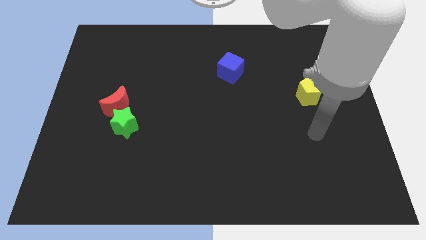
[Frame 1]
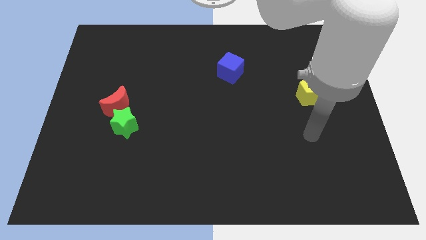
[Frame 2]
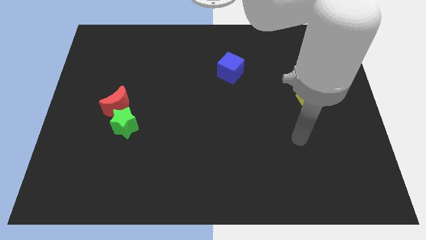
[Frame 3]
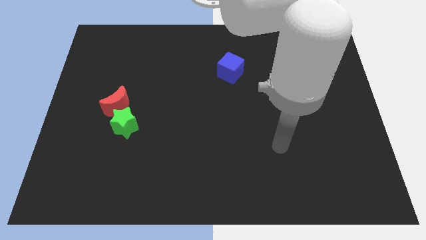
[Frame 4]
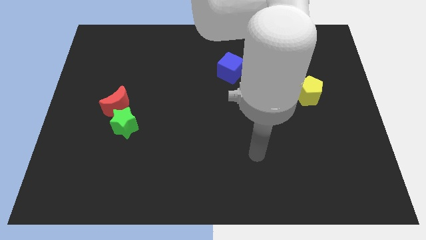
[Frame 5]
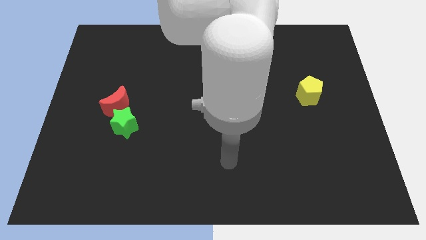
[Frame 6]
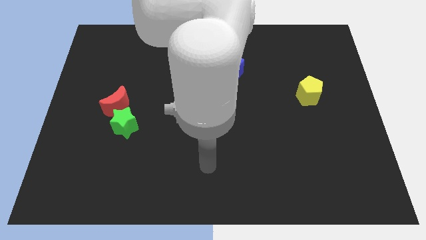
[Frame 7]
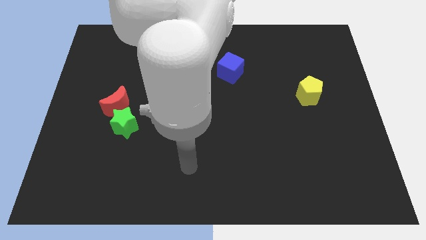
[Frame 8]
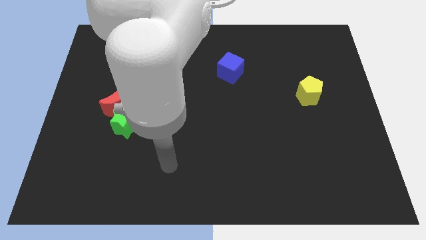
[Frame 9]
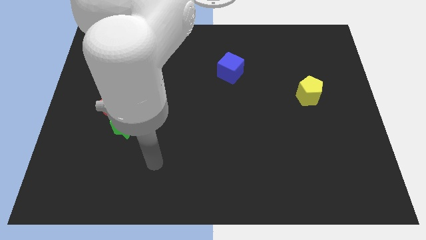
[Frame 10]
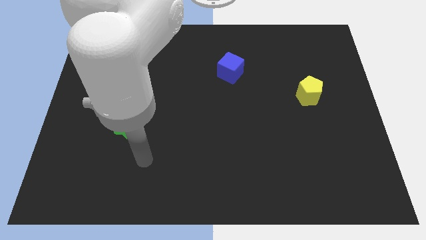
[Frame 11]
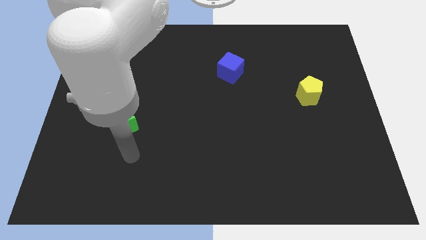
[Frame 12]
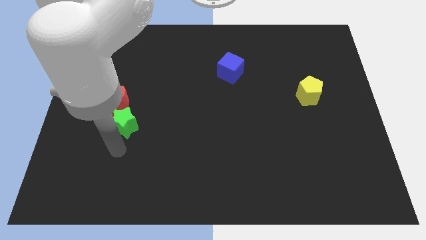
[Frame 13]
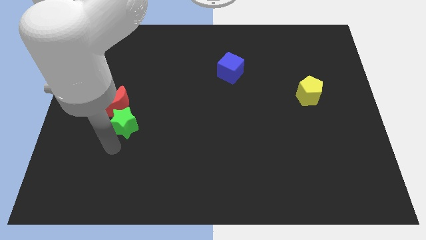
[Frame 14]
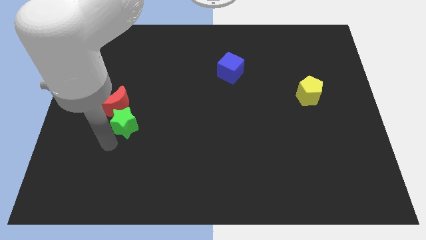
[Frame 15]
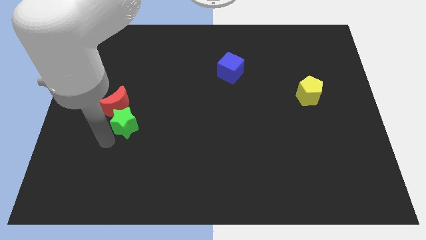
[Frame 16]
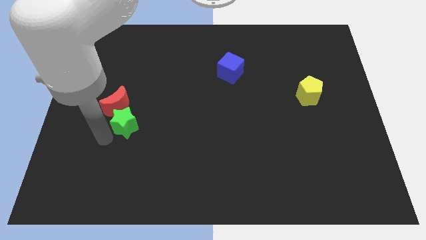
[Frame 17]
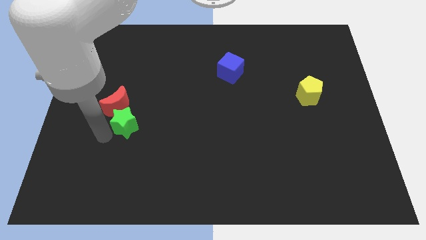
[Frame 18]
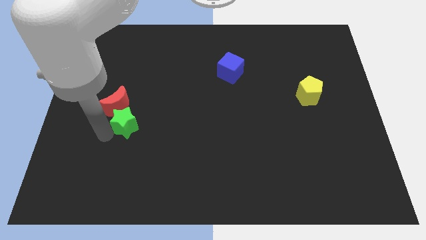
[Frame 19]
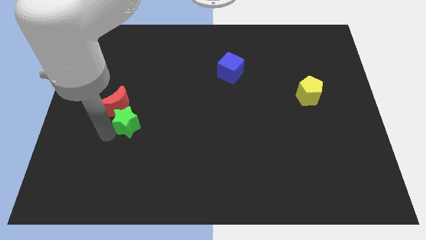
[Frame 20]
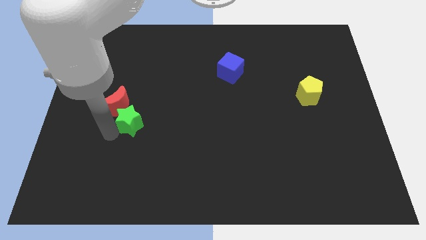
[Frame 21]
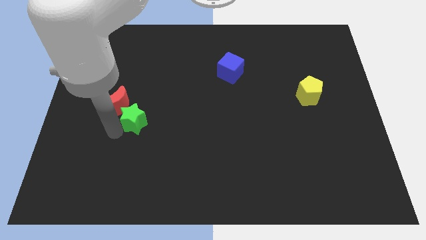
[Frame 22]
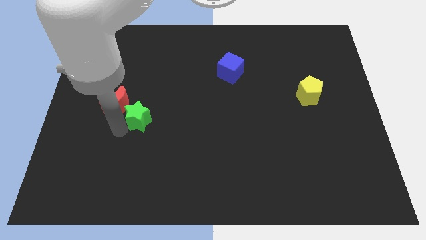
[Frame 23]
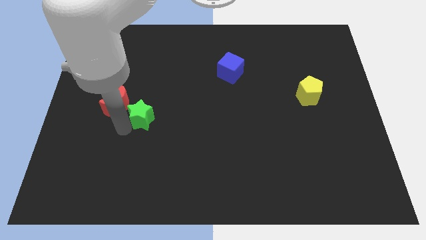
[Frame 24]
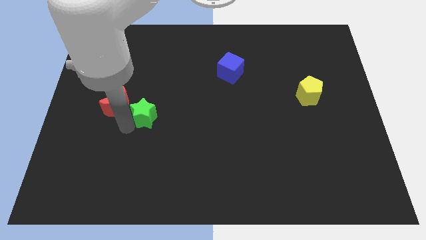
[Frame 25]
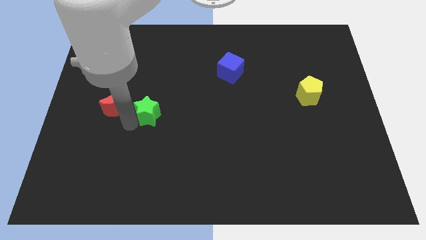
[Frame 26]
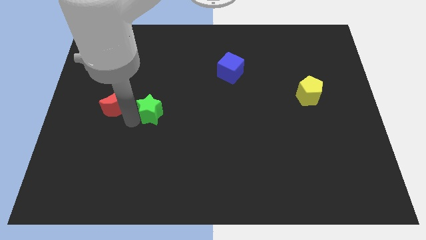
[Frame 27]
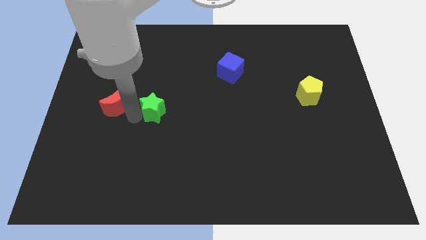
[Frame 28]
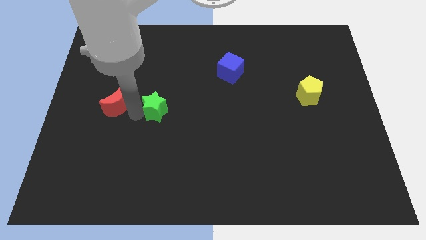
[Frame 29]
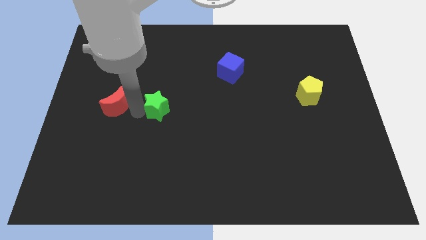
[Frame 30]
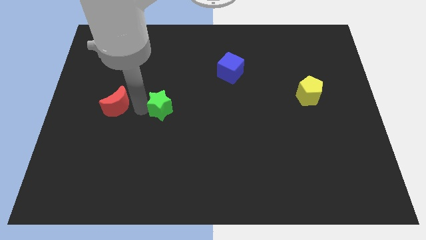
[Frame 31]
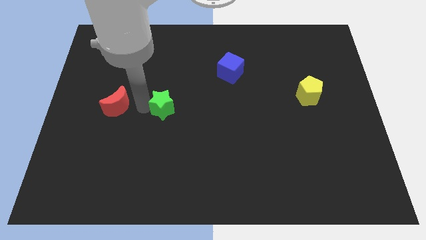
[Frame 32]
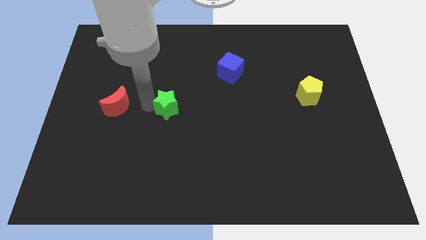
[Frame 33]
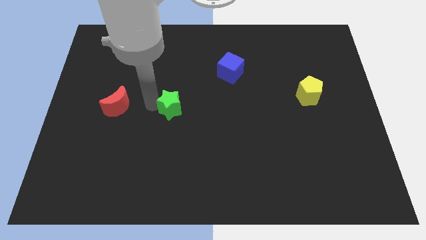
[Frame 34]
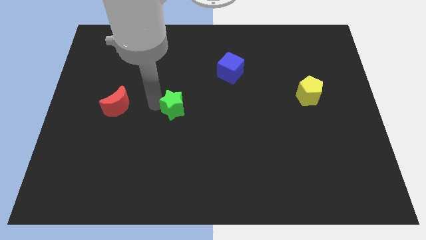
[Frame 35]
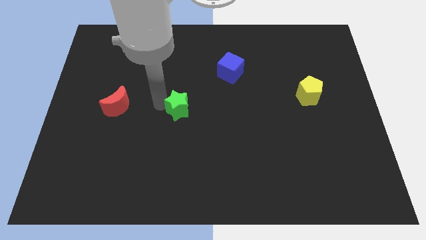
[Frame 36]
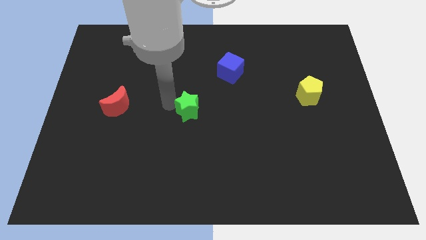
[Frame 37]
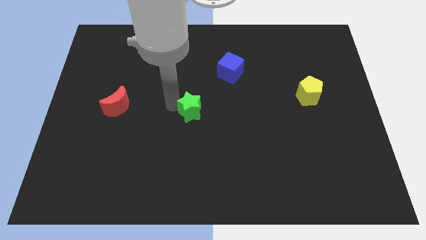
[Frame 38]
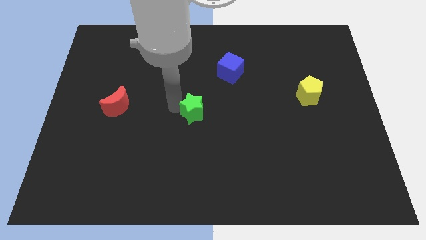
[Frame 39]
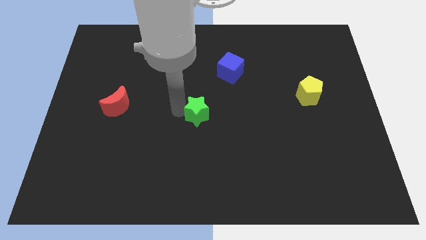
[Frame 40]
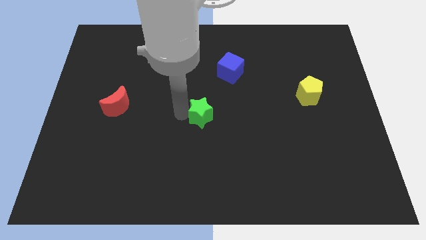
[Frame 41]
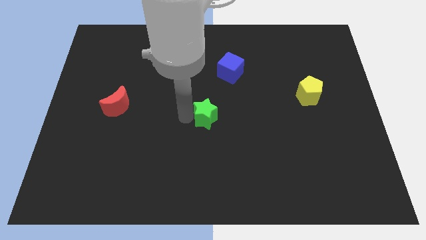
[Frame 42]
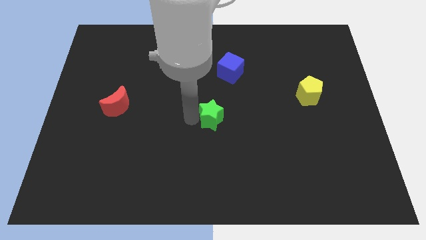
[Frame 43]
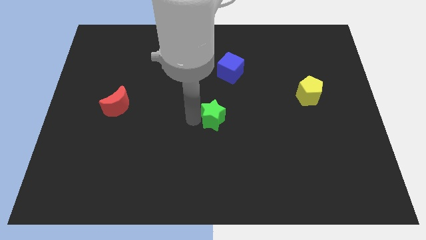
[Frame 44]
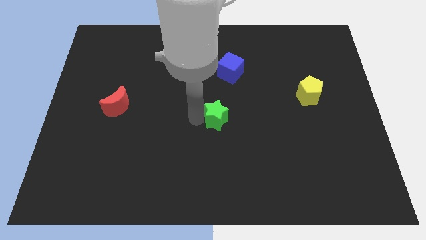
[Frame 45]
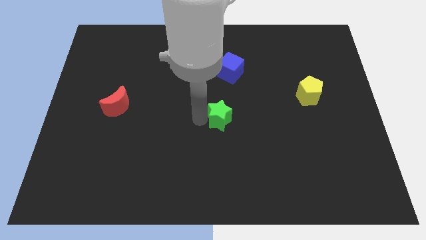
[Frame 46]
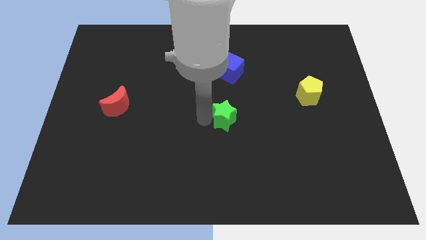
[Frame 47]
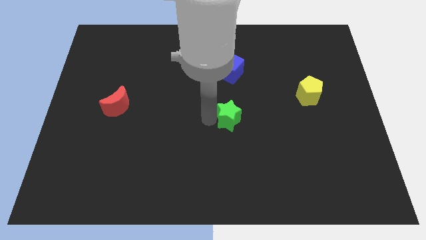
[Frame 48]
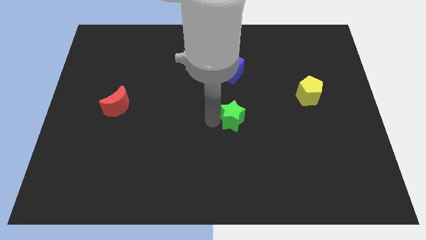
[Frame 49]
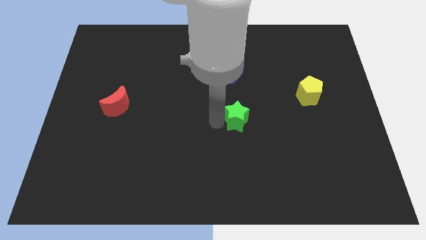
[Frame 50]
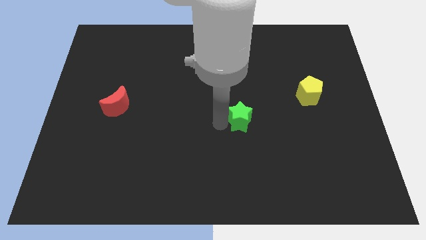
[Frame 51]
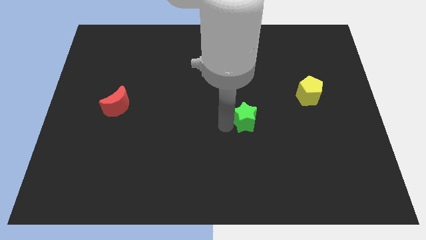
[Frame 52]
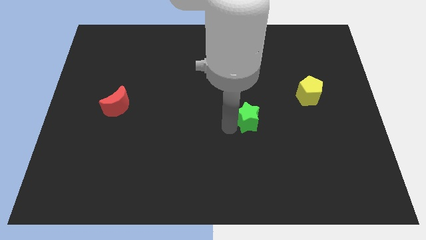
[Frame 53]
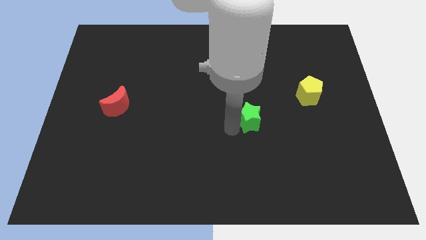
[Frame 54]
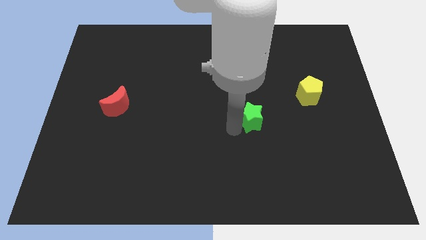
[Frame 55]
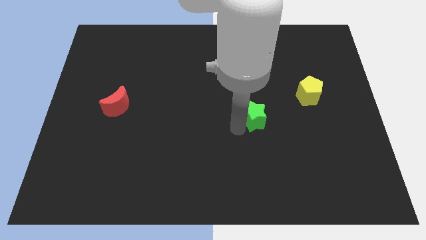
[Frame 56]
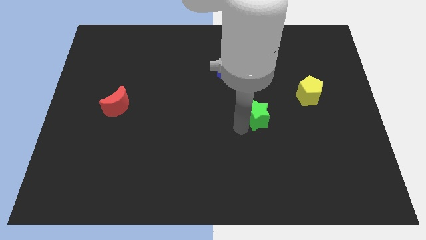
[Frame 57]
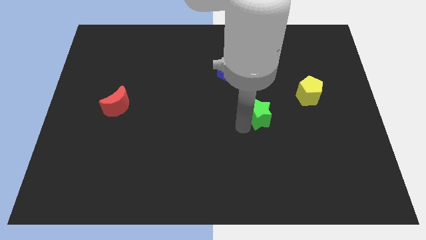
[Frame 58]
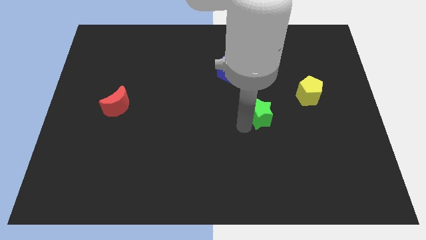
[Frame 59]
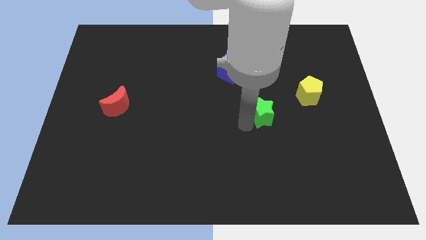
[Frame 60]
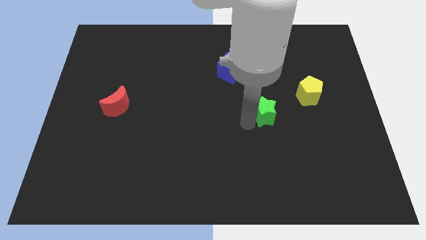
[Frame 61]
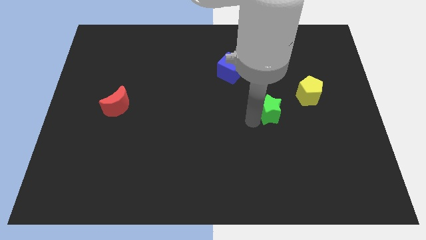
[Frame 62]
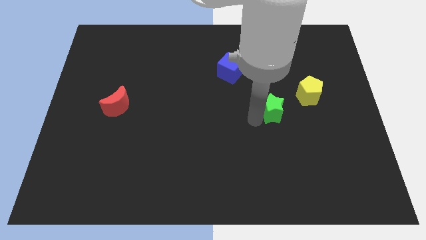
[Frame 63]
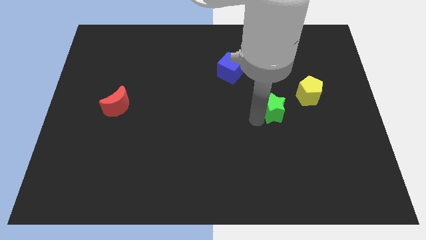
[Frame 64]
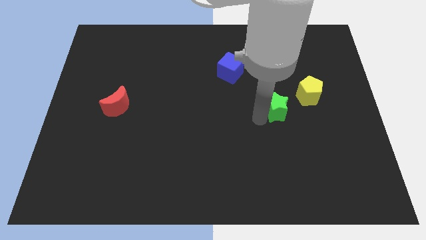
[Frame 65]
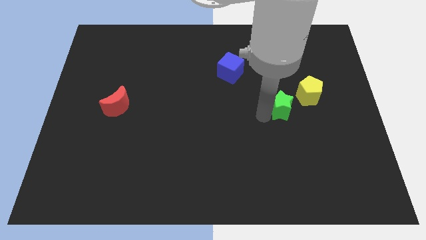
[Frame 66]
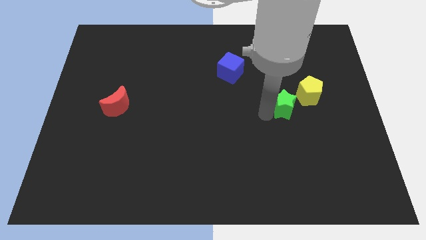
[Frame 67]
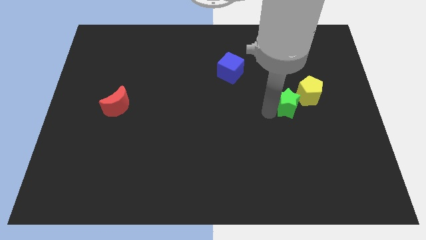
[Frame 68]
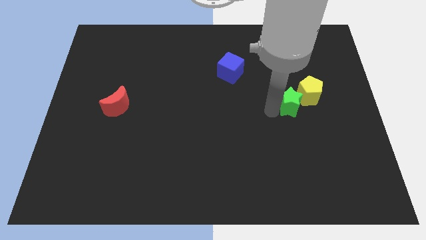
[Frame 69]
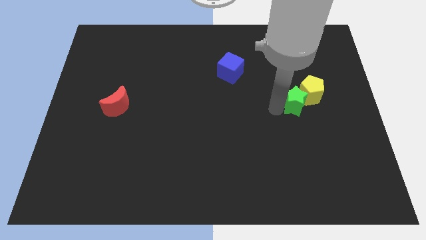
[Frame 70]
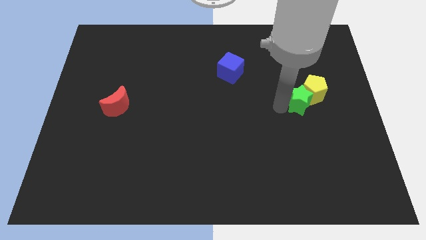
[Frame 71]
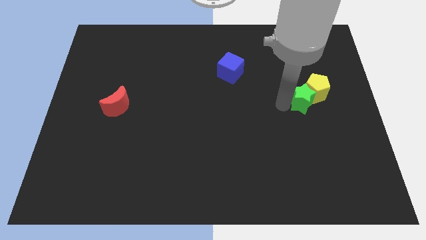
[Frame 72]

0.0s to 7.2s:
push the green block close to the yellow block

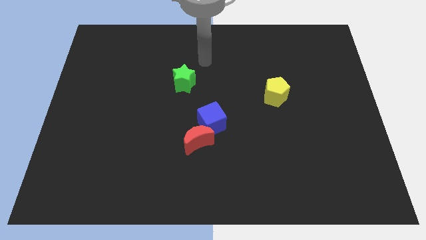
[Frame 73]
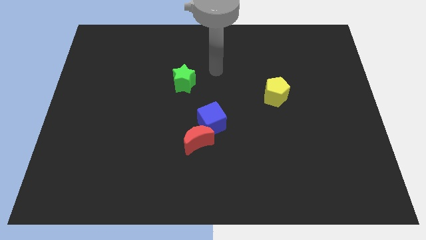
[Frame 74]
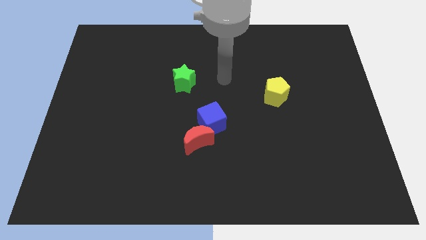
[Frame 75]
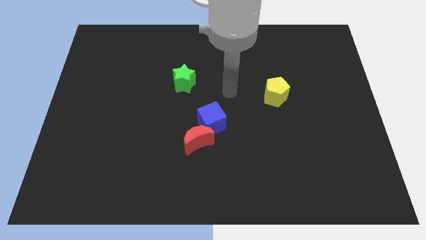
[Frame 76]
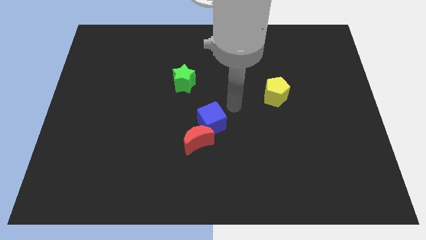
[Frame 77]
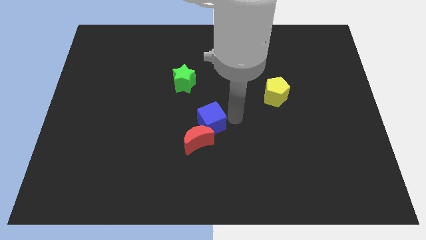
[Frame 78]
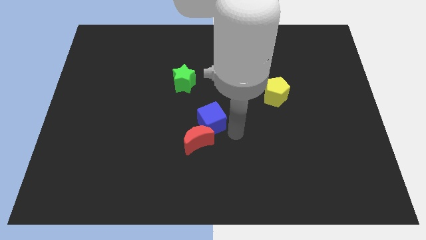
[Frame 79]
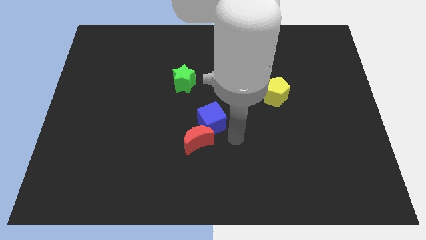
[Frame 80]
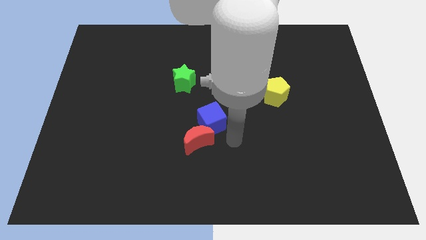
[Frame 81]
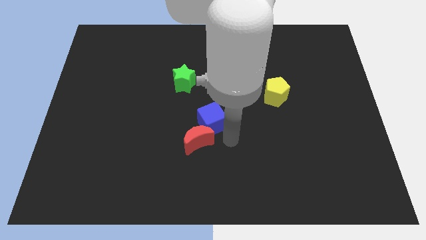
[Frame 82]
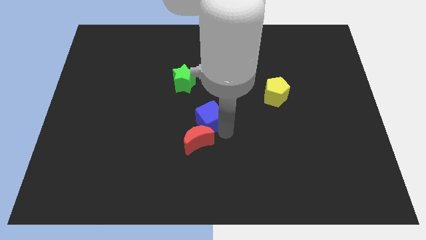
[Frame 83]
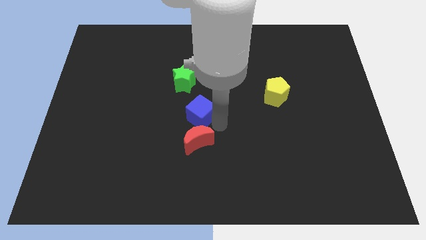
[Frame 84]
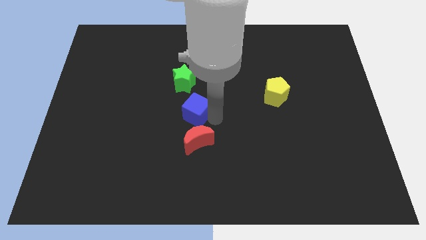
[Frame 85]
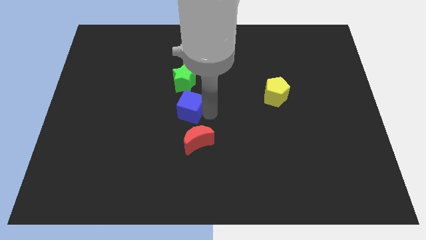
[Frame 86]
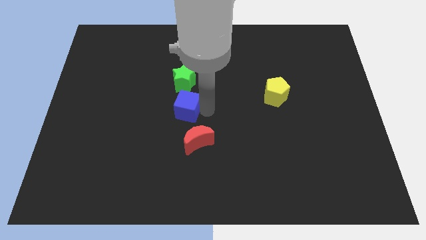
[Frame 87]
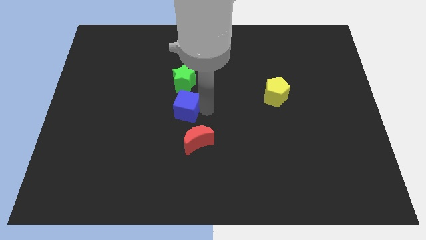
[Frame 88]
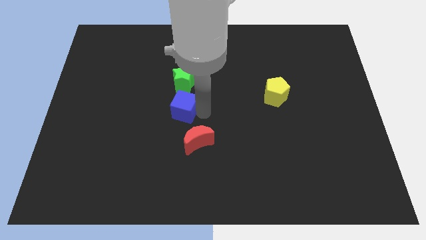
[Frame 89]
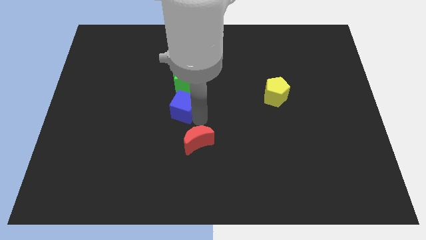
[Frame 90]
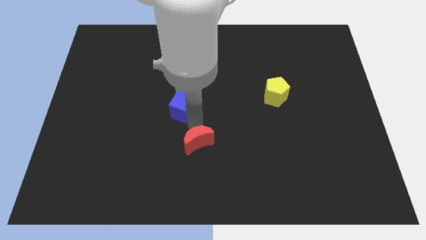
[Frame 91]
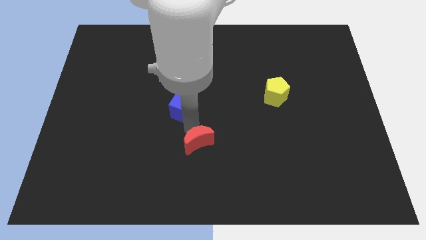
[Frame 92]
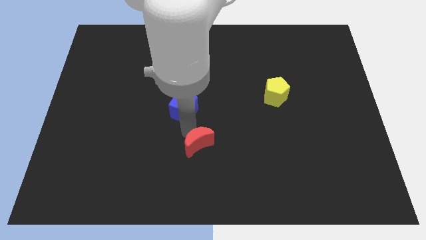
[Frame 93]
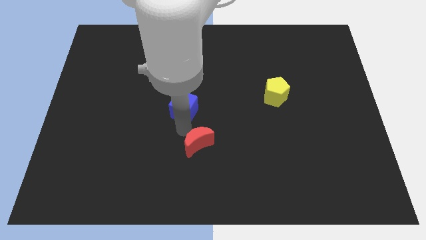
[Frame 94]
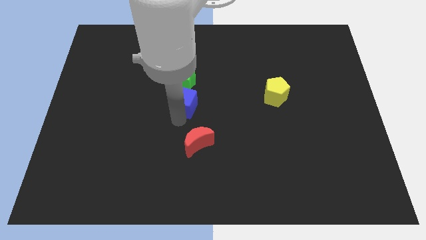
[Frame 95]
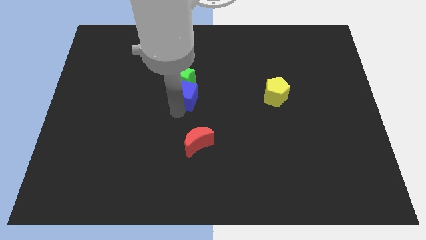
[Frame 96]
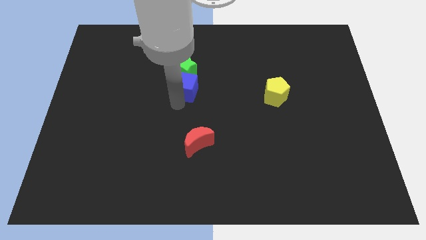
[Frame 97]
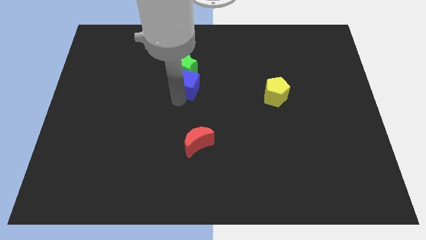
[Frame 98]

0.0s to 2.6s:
push the cube close to the star
